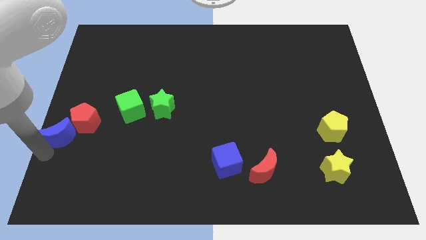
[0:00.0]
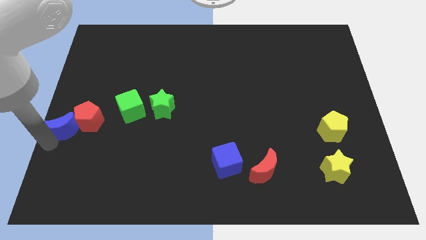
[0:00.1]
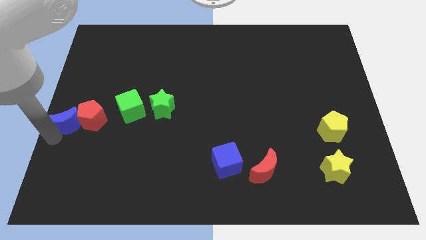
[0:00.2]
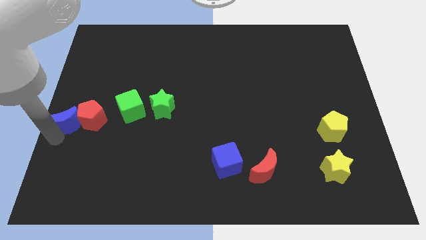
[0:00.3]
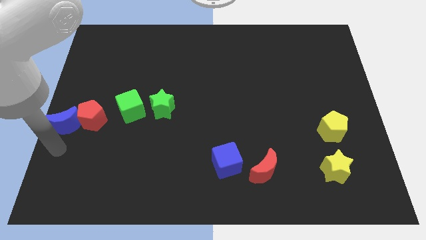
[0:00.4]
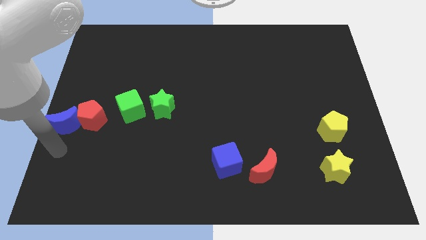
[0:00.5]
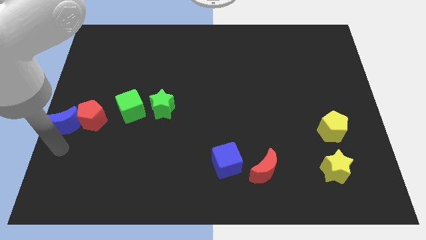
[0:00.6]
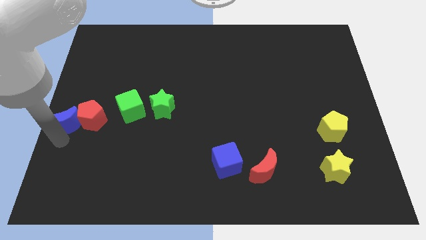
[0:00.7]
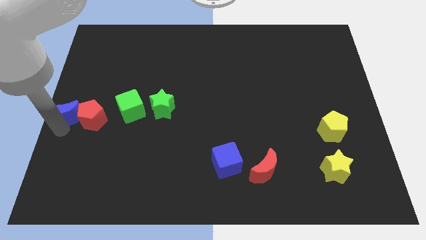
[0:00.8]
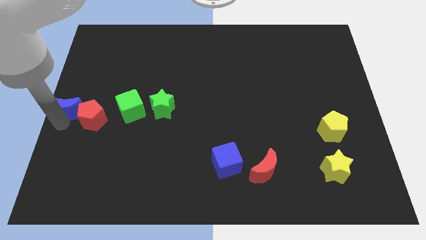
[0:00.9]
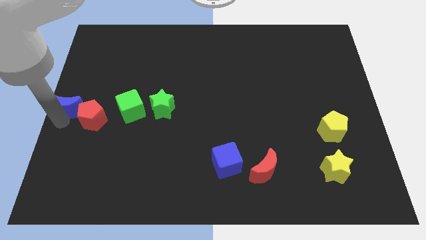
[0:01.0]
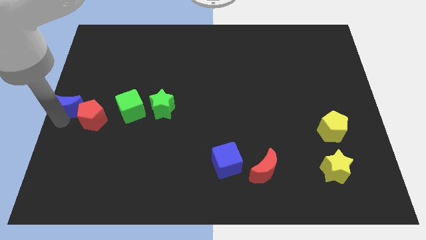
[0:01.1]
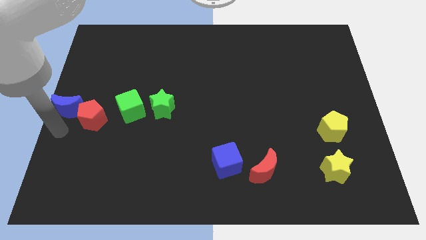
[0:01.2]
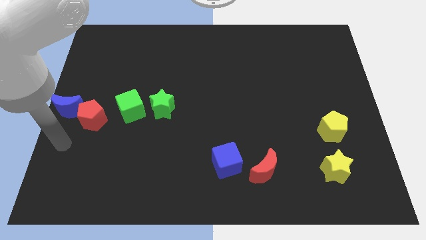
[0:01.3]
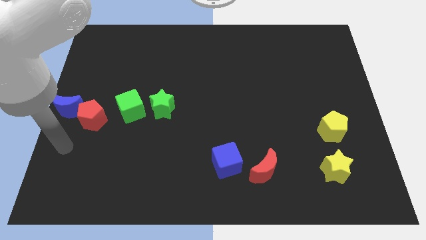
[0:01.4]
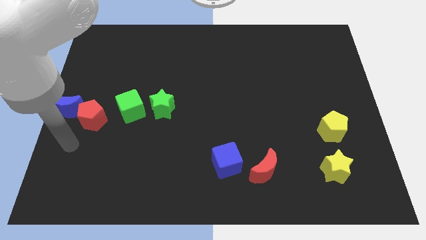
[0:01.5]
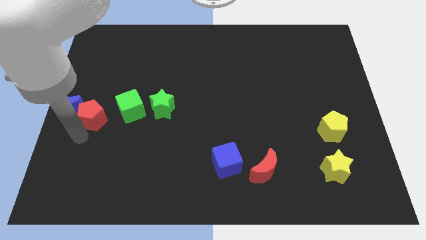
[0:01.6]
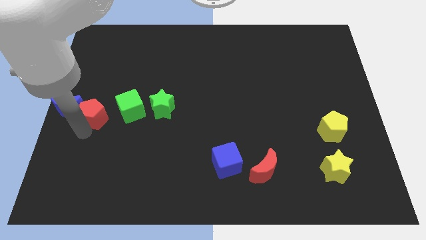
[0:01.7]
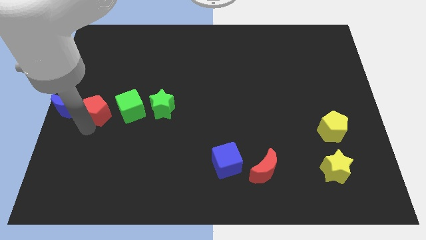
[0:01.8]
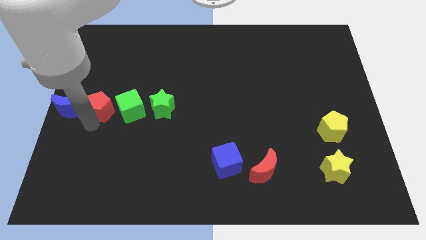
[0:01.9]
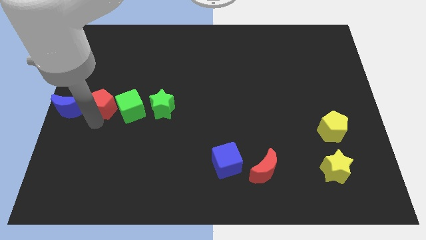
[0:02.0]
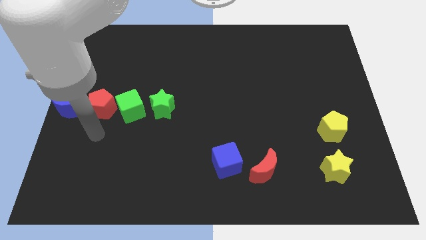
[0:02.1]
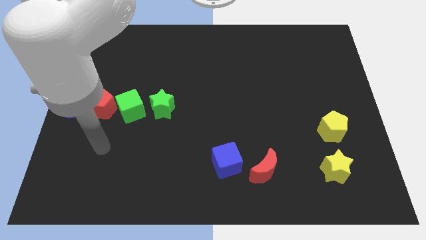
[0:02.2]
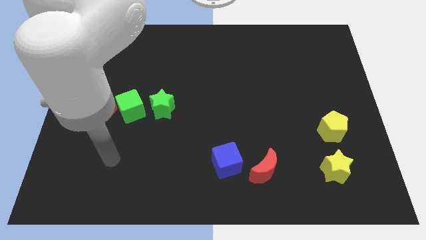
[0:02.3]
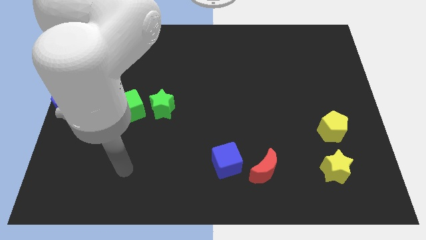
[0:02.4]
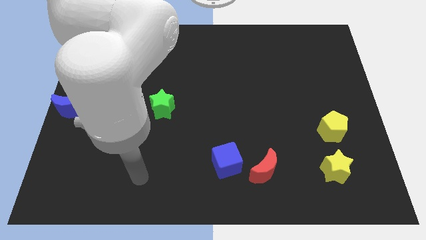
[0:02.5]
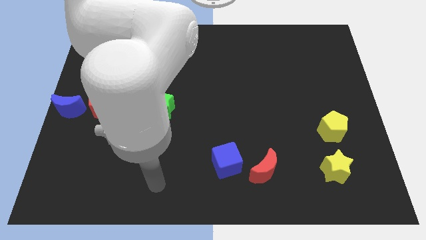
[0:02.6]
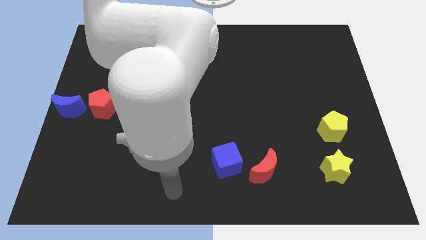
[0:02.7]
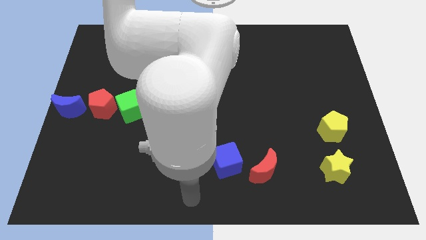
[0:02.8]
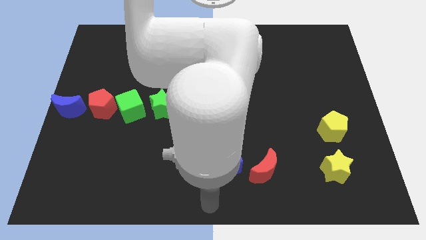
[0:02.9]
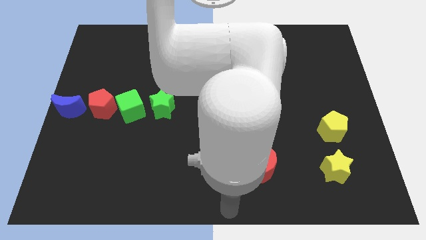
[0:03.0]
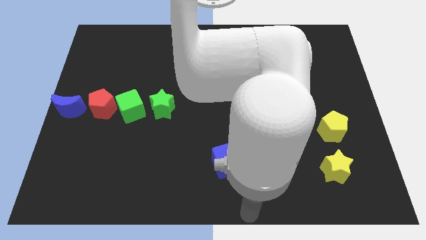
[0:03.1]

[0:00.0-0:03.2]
move the red pentagon and the blue moon to the left side of the green cube to make a line

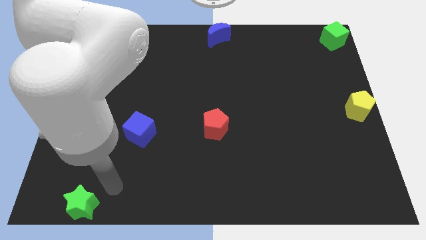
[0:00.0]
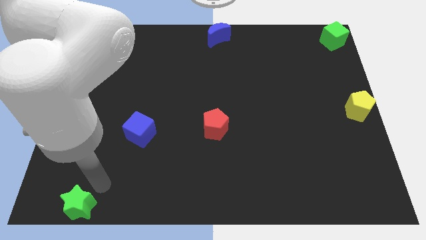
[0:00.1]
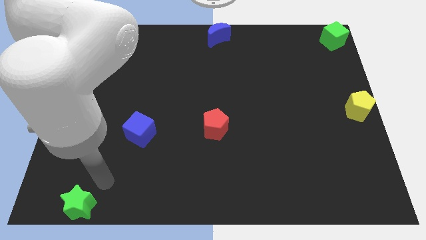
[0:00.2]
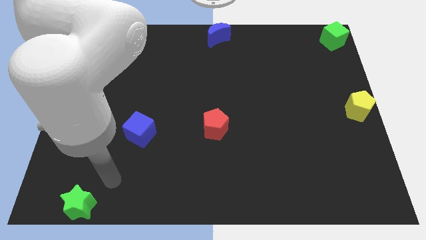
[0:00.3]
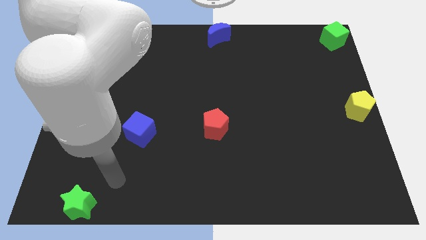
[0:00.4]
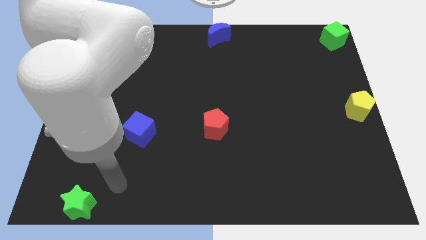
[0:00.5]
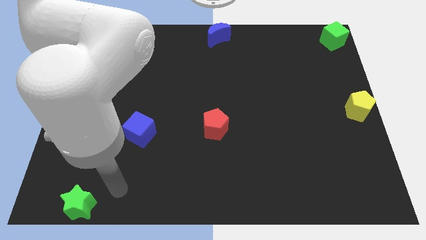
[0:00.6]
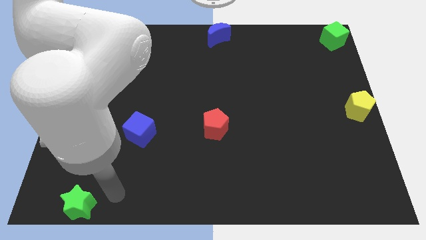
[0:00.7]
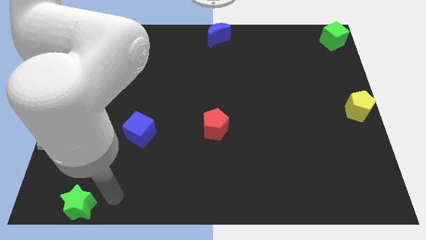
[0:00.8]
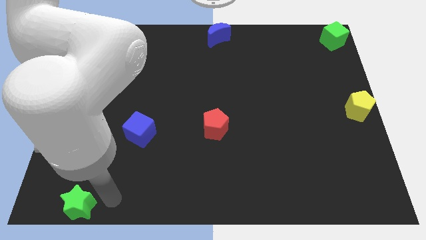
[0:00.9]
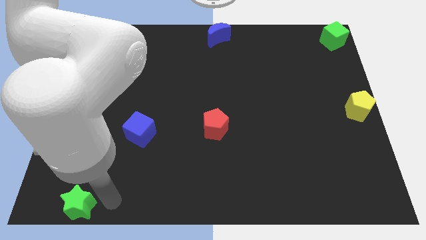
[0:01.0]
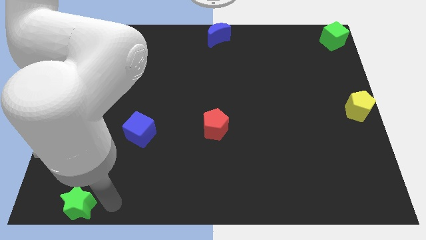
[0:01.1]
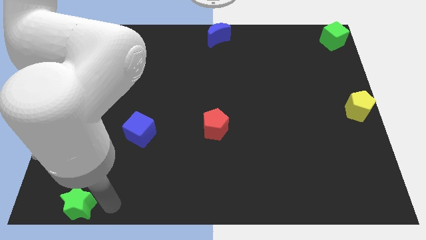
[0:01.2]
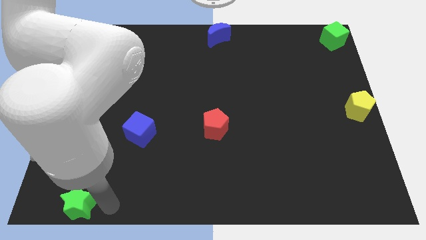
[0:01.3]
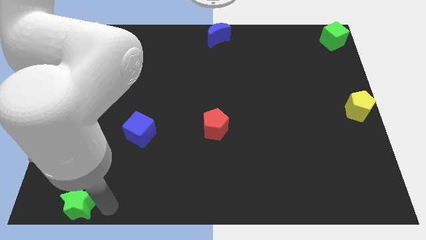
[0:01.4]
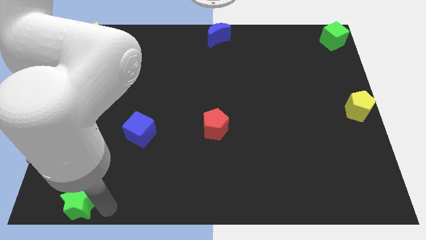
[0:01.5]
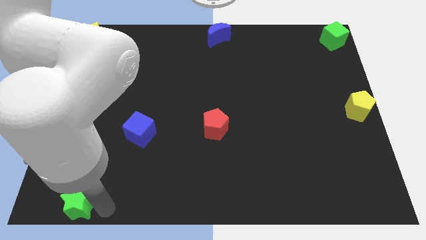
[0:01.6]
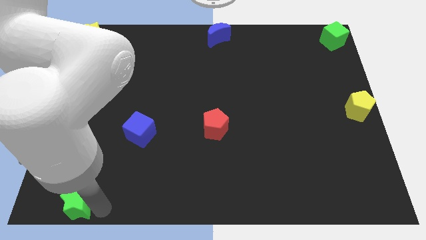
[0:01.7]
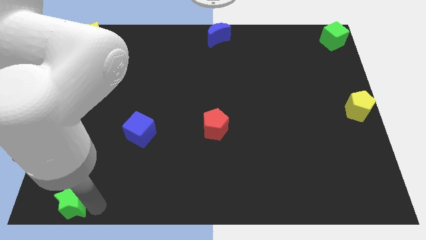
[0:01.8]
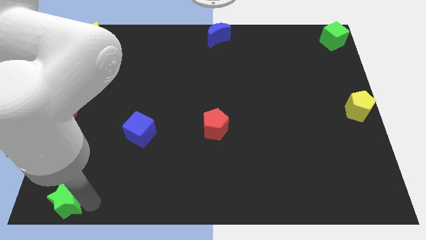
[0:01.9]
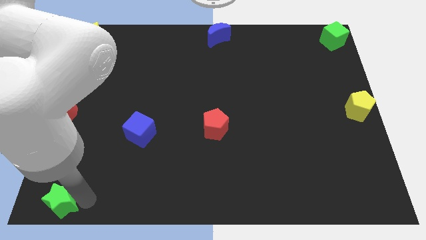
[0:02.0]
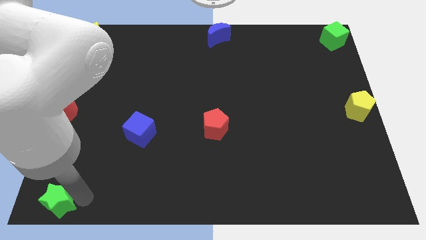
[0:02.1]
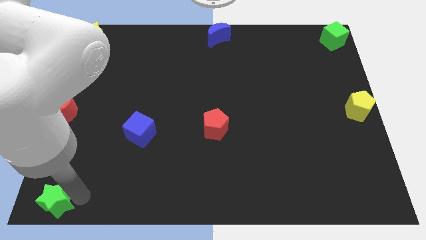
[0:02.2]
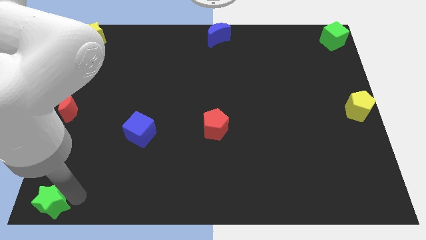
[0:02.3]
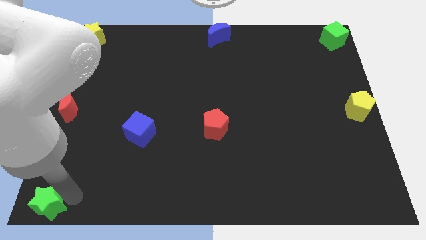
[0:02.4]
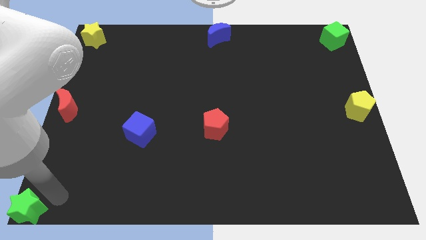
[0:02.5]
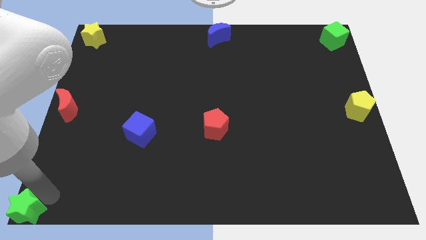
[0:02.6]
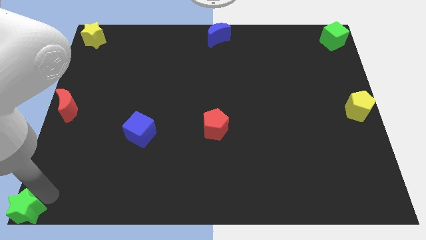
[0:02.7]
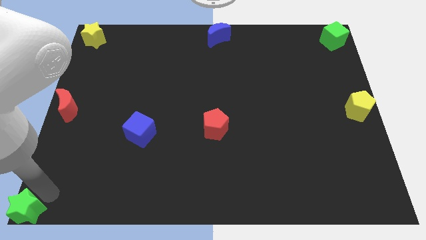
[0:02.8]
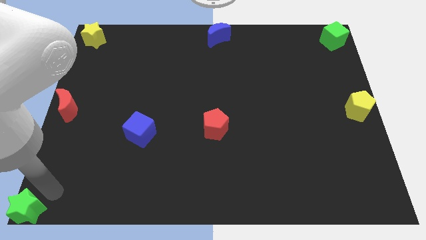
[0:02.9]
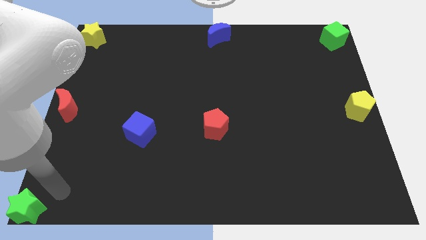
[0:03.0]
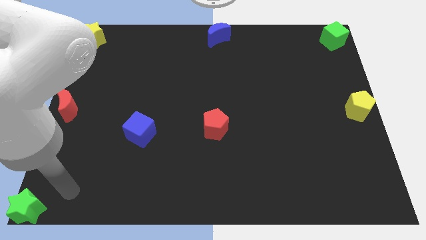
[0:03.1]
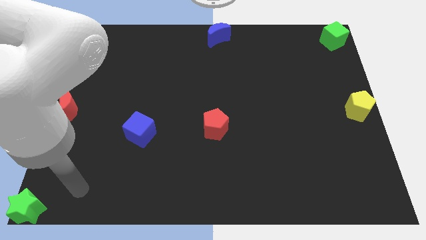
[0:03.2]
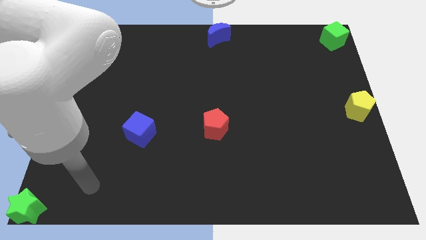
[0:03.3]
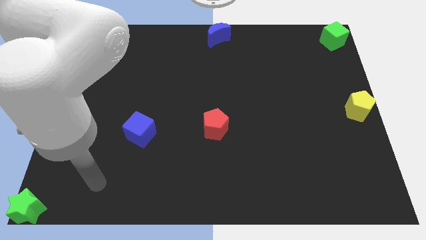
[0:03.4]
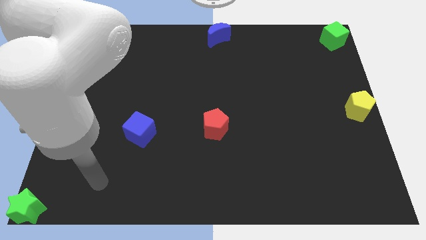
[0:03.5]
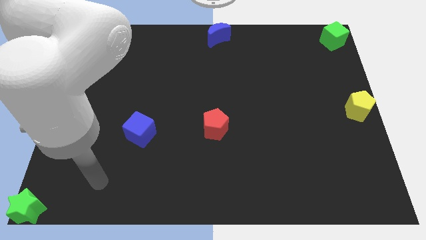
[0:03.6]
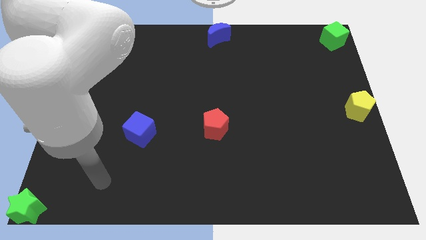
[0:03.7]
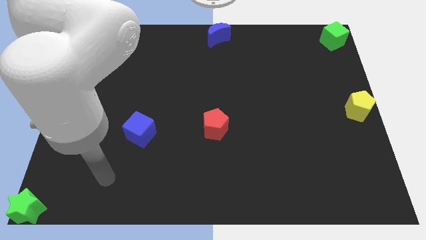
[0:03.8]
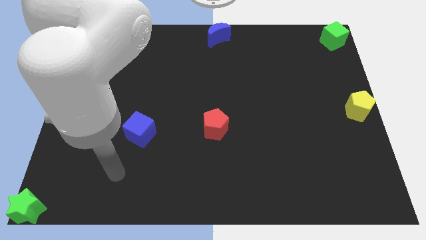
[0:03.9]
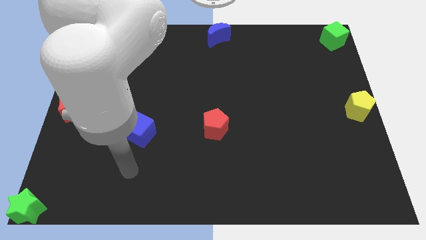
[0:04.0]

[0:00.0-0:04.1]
place the green star to the bottom left corner of the board

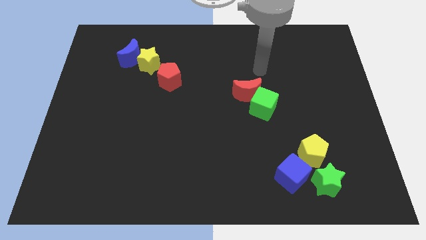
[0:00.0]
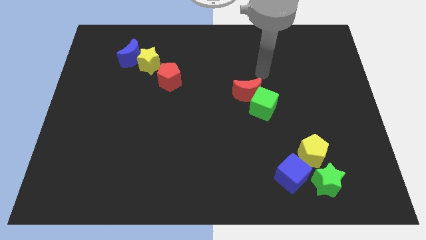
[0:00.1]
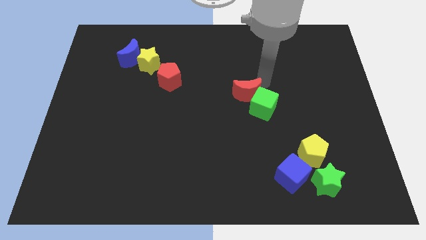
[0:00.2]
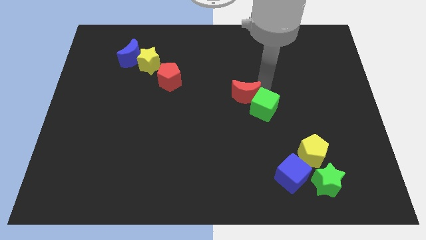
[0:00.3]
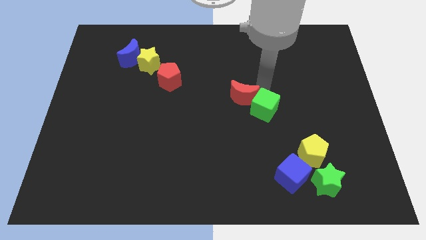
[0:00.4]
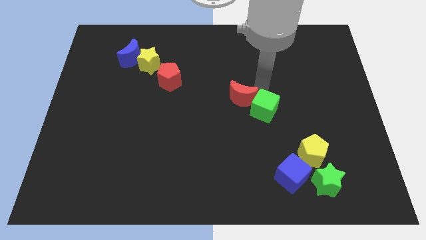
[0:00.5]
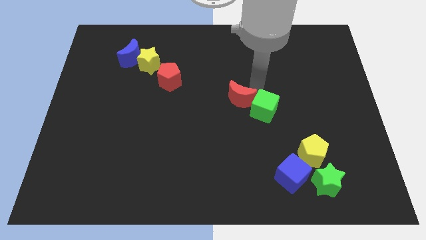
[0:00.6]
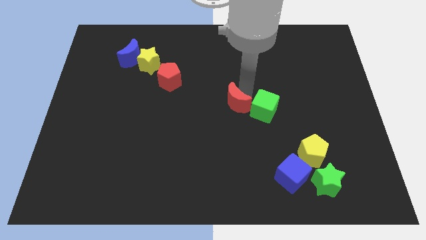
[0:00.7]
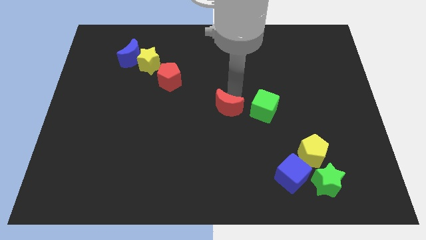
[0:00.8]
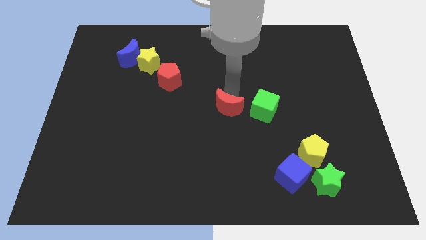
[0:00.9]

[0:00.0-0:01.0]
separate the red moon from the green cube

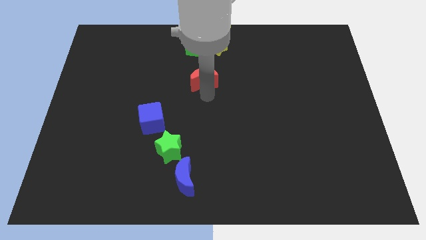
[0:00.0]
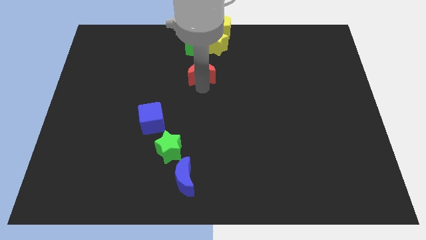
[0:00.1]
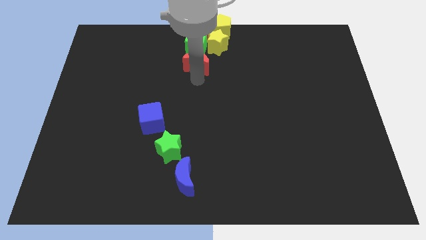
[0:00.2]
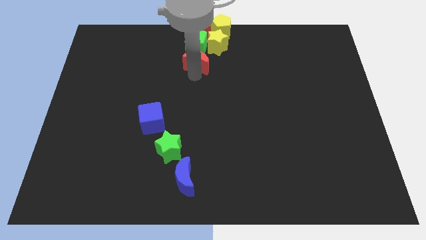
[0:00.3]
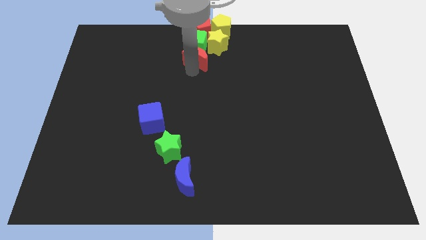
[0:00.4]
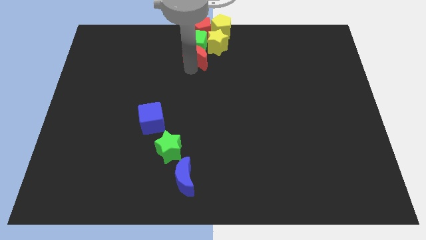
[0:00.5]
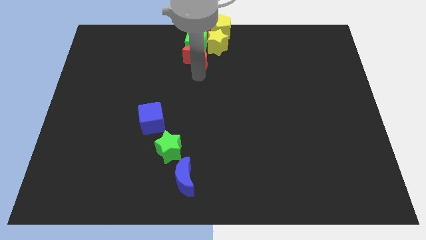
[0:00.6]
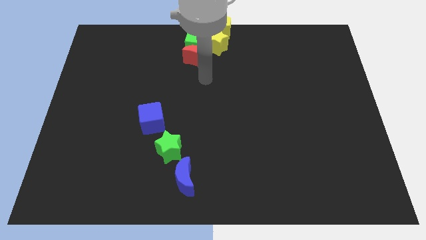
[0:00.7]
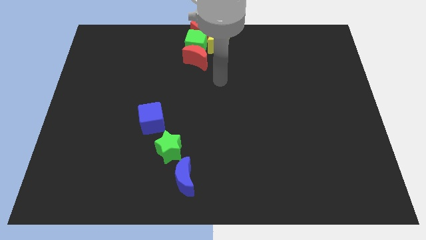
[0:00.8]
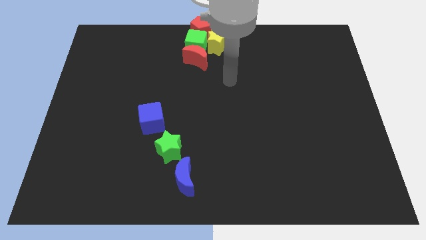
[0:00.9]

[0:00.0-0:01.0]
push the red crescent into the green cube
